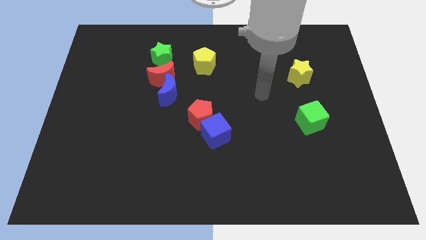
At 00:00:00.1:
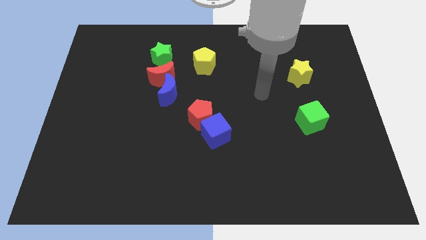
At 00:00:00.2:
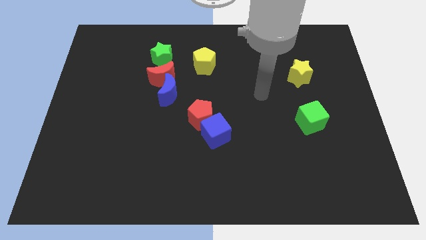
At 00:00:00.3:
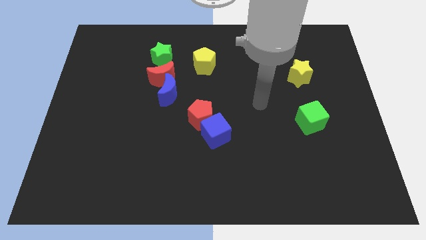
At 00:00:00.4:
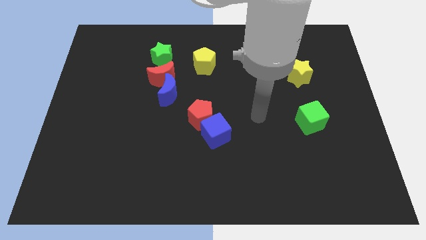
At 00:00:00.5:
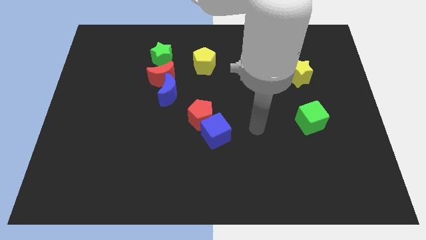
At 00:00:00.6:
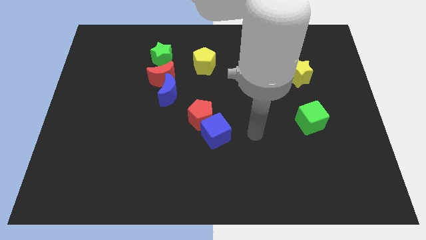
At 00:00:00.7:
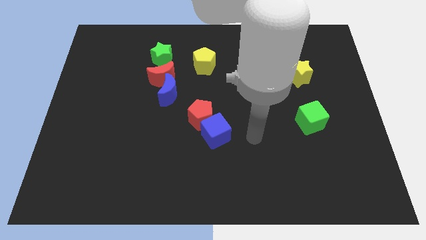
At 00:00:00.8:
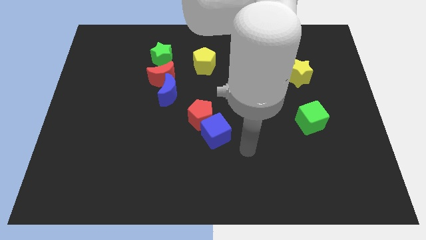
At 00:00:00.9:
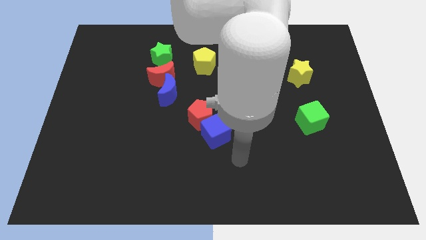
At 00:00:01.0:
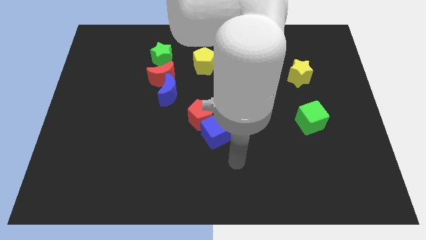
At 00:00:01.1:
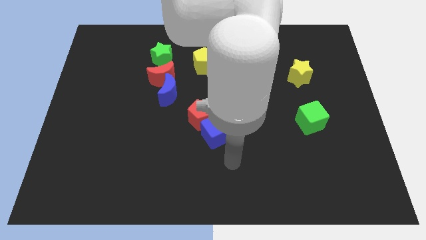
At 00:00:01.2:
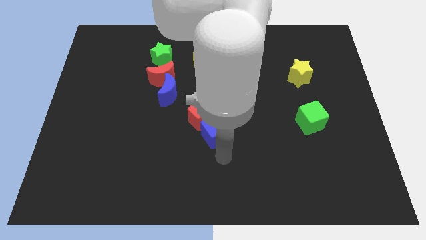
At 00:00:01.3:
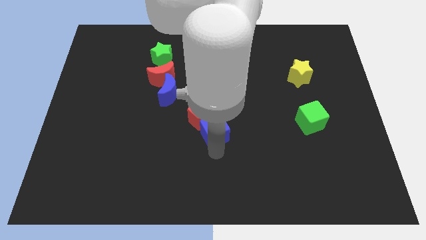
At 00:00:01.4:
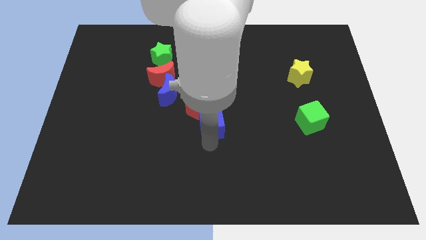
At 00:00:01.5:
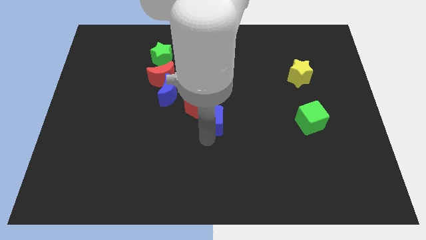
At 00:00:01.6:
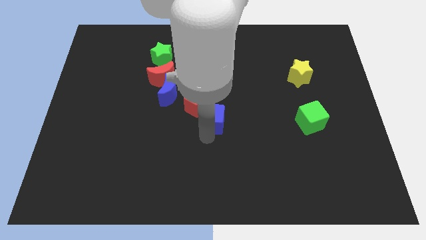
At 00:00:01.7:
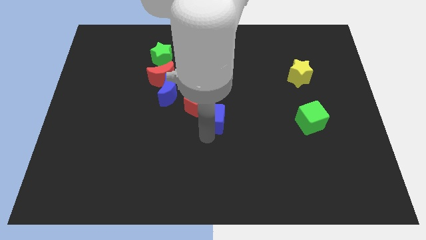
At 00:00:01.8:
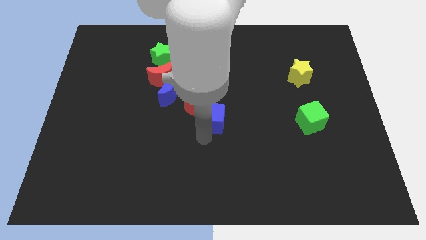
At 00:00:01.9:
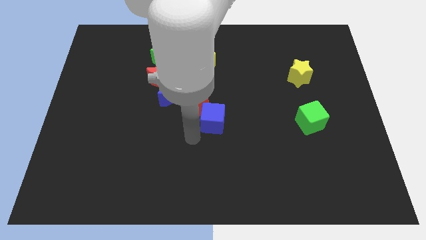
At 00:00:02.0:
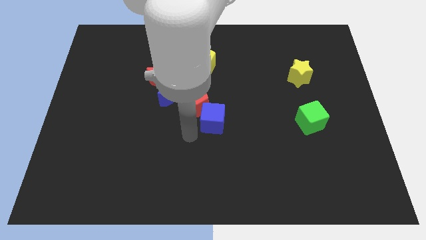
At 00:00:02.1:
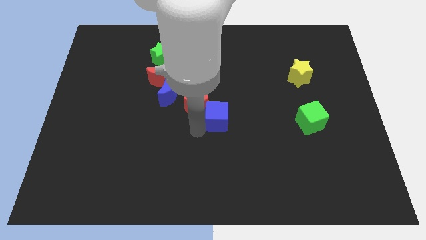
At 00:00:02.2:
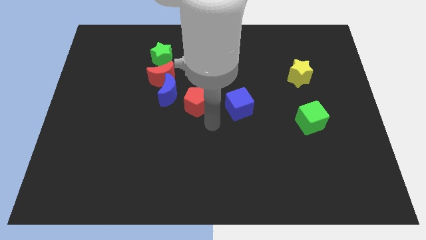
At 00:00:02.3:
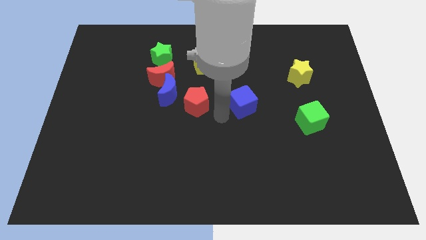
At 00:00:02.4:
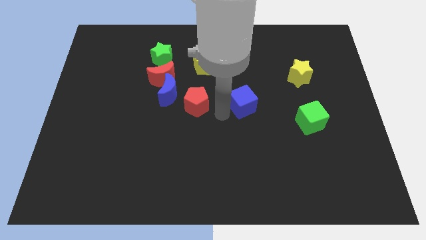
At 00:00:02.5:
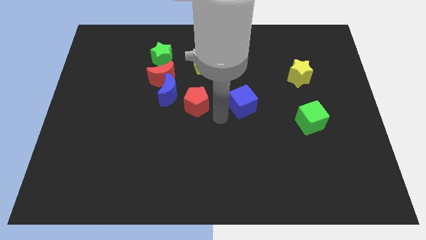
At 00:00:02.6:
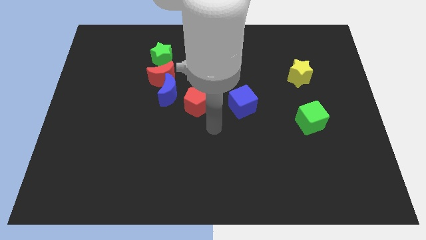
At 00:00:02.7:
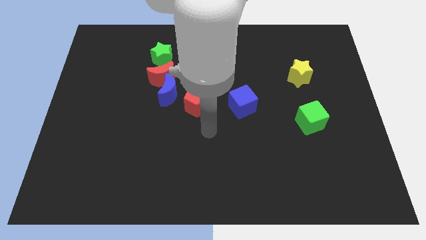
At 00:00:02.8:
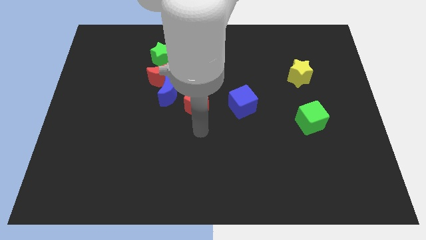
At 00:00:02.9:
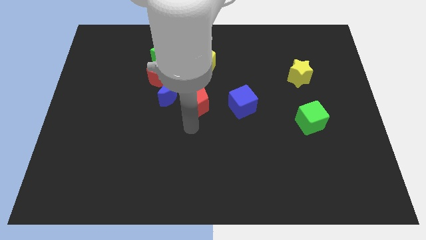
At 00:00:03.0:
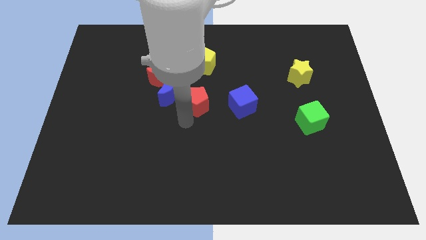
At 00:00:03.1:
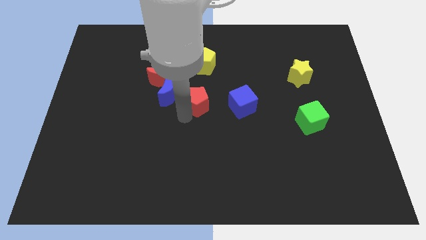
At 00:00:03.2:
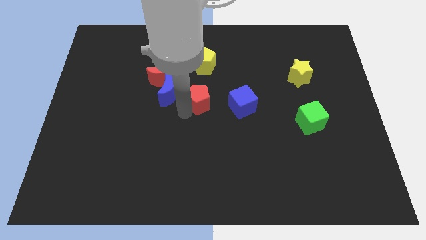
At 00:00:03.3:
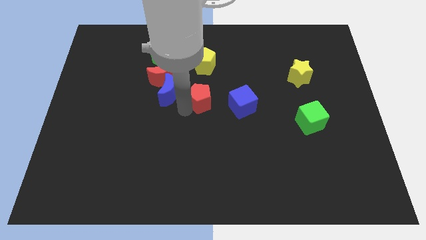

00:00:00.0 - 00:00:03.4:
place the blue cube right to the red pentagon

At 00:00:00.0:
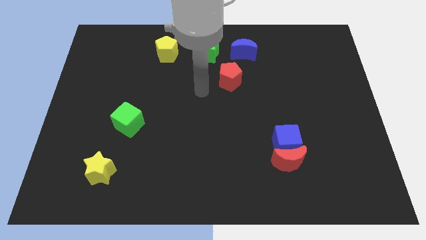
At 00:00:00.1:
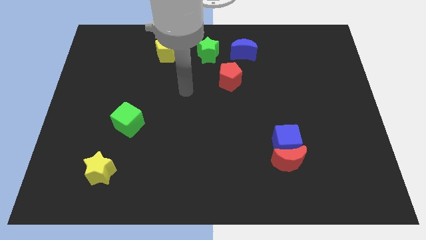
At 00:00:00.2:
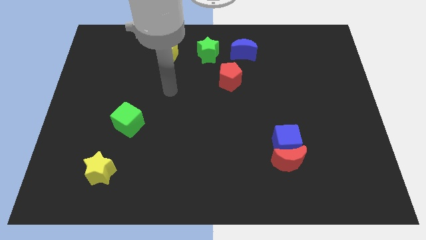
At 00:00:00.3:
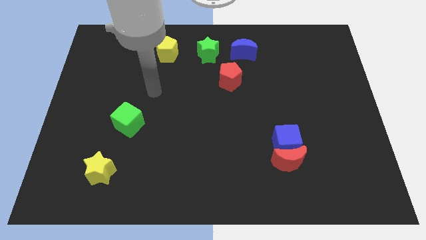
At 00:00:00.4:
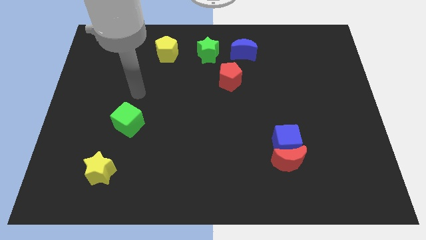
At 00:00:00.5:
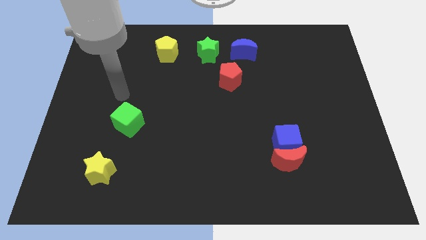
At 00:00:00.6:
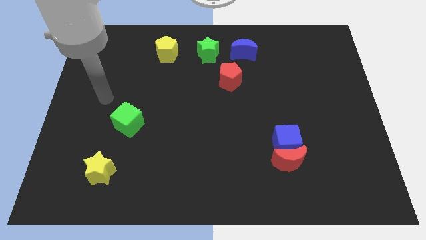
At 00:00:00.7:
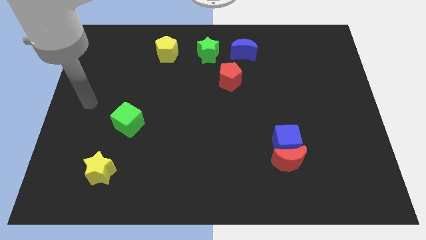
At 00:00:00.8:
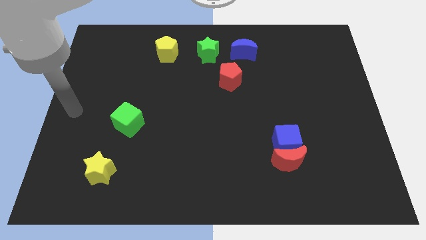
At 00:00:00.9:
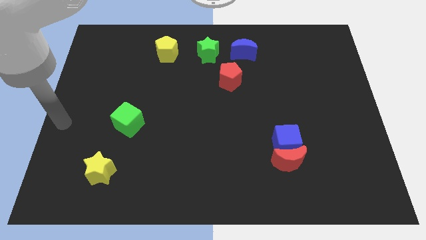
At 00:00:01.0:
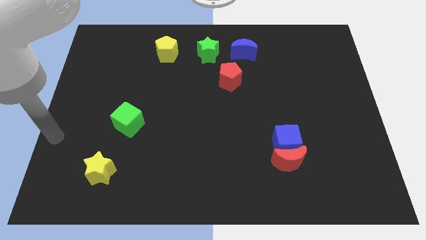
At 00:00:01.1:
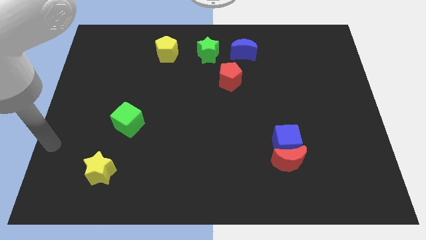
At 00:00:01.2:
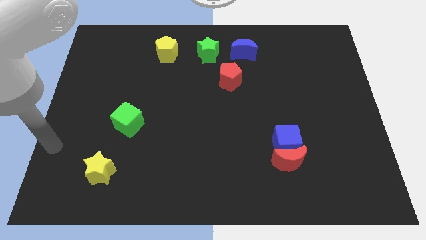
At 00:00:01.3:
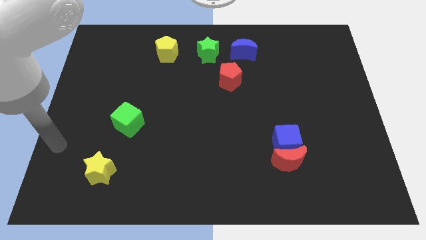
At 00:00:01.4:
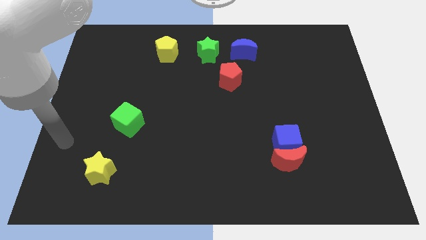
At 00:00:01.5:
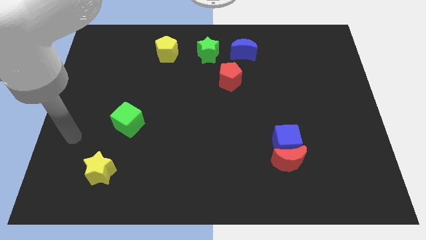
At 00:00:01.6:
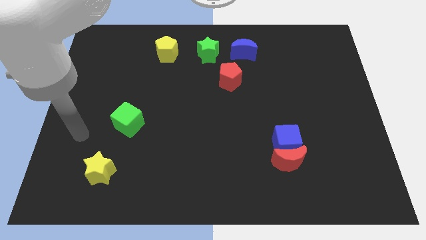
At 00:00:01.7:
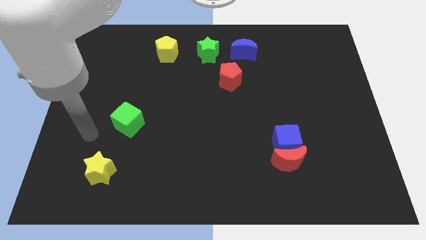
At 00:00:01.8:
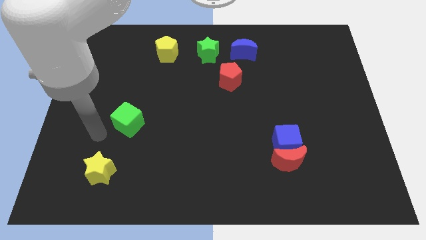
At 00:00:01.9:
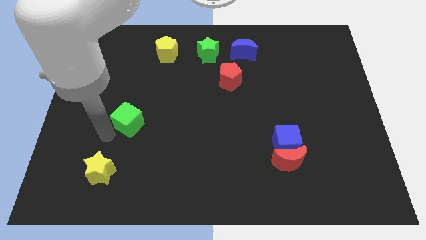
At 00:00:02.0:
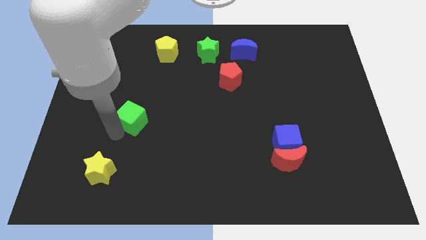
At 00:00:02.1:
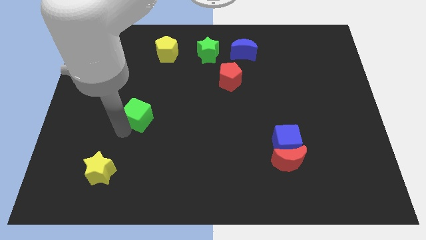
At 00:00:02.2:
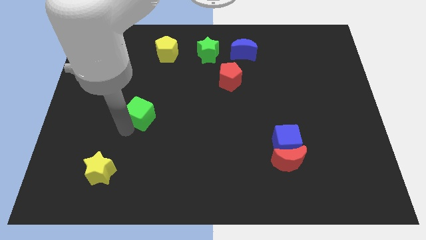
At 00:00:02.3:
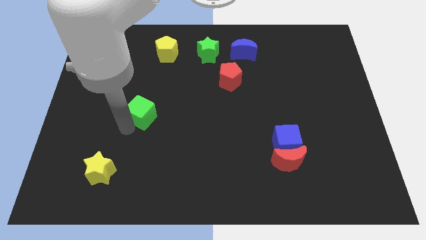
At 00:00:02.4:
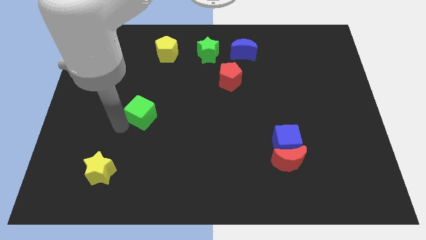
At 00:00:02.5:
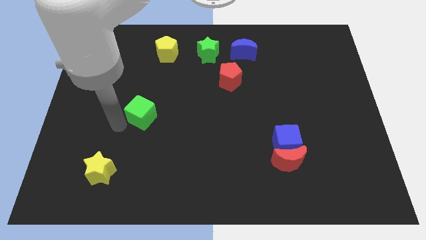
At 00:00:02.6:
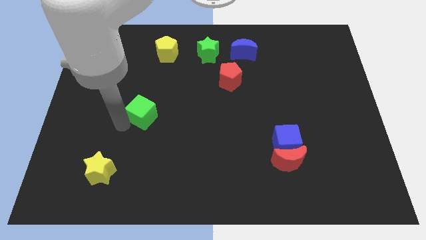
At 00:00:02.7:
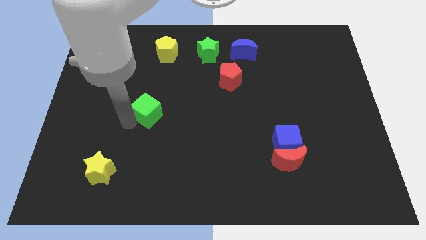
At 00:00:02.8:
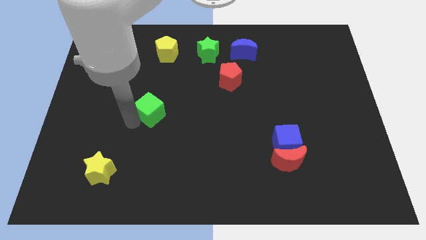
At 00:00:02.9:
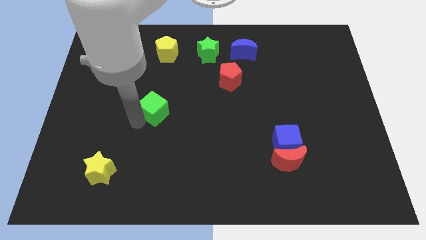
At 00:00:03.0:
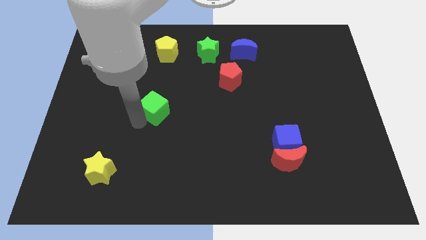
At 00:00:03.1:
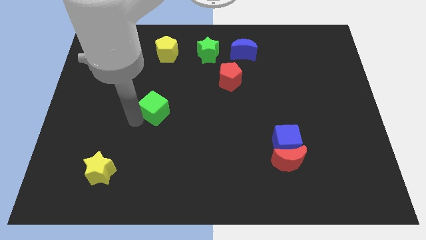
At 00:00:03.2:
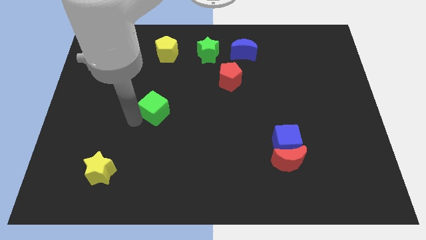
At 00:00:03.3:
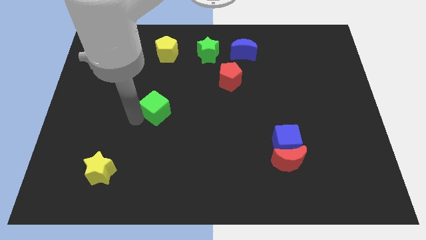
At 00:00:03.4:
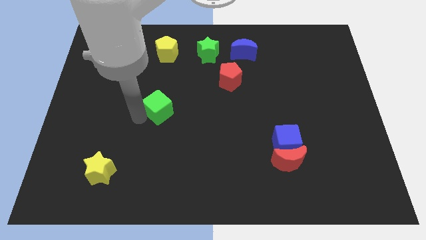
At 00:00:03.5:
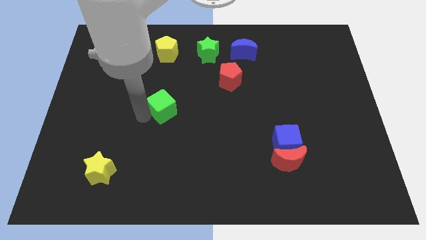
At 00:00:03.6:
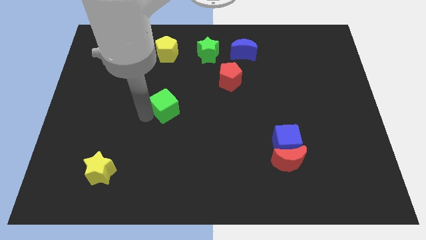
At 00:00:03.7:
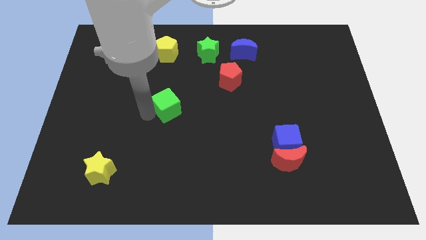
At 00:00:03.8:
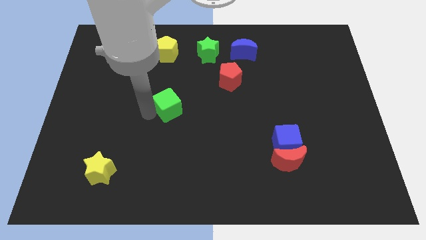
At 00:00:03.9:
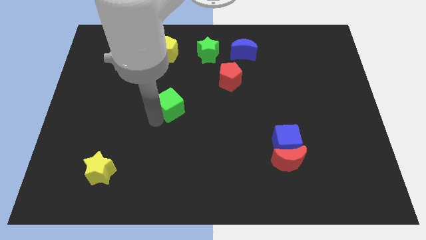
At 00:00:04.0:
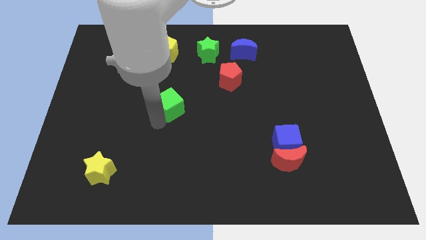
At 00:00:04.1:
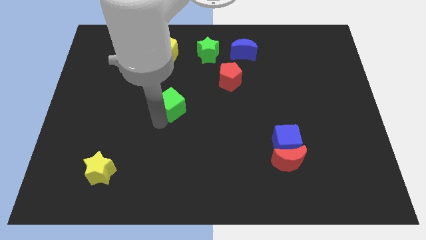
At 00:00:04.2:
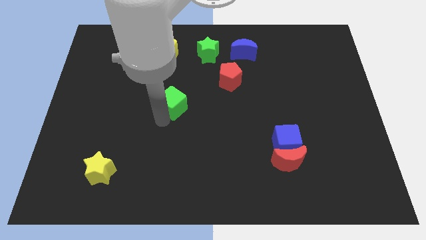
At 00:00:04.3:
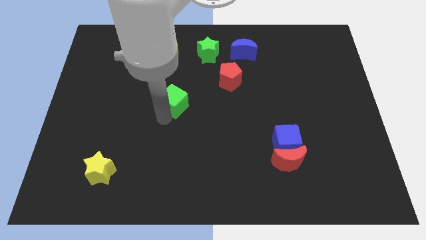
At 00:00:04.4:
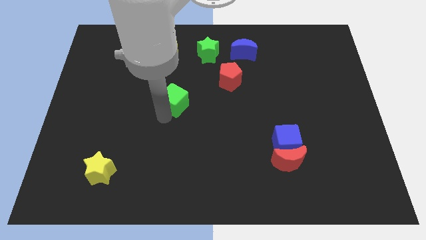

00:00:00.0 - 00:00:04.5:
move the green cube towards red pentagon

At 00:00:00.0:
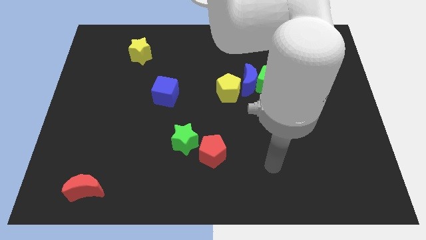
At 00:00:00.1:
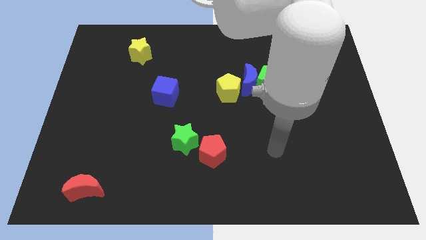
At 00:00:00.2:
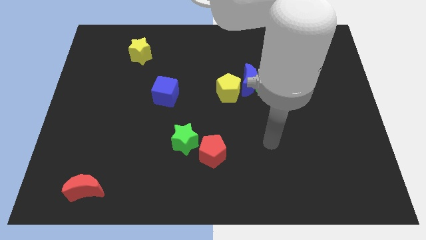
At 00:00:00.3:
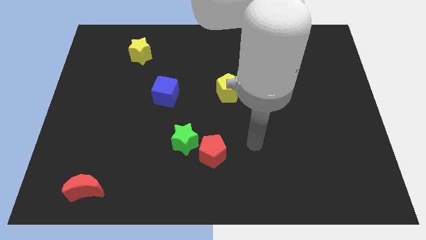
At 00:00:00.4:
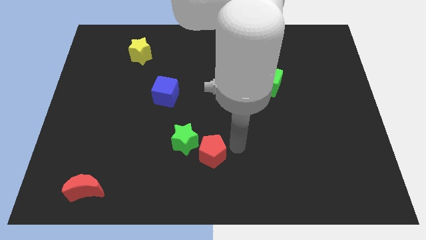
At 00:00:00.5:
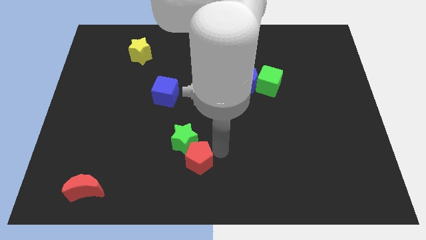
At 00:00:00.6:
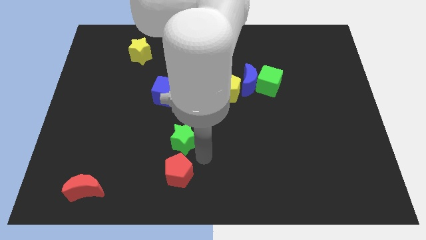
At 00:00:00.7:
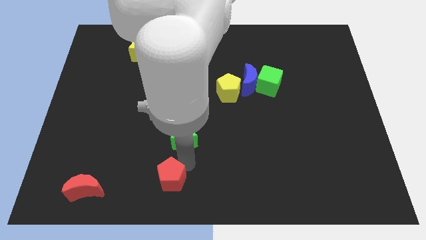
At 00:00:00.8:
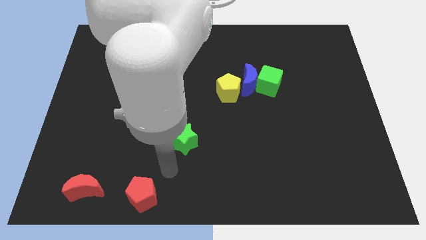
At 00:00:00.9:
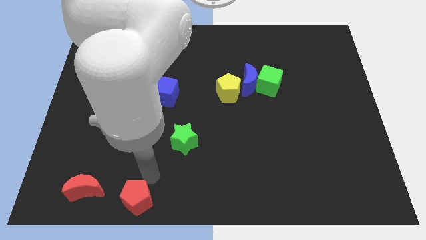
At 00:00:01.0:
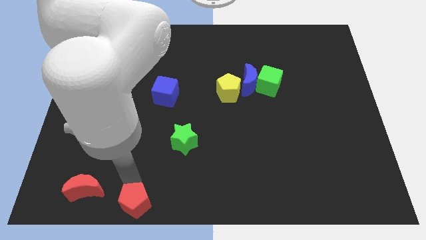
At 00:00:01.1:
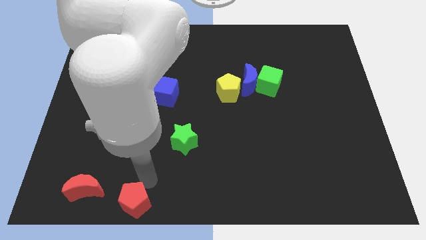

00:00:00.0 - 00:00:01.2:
place the red pentagon to the bottom of the board
